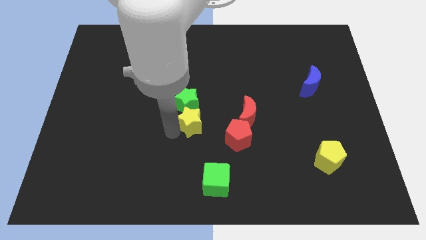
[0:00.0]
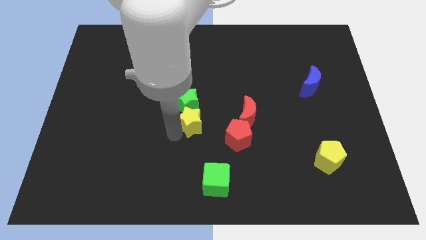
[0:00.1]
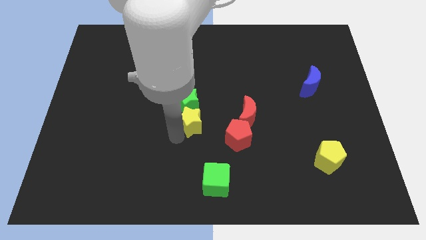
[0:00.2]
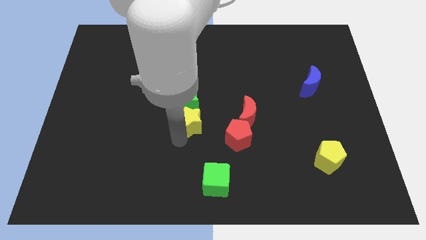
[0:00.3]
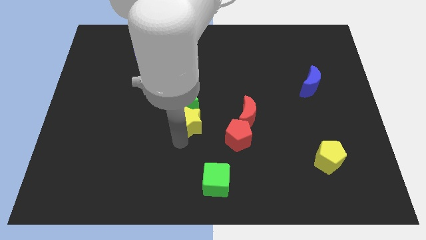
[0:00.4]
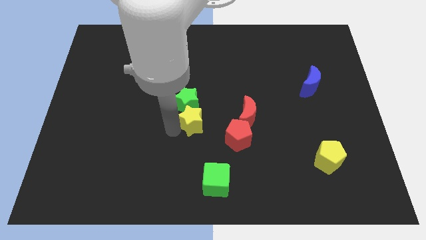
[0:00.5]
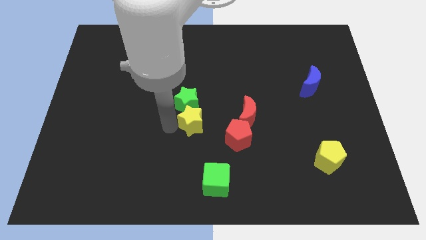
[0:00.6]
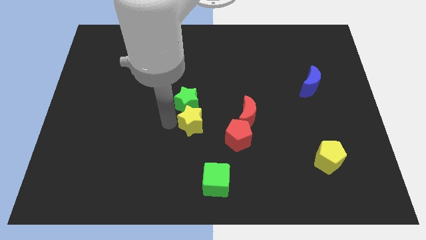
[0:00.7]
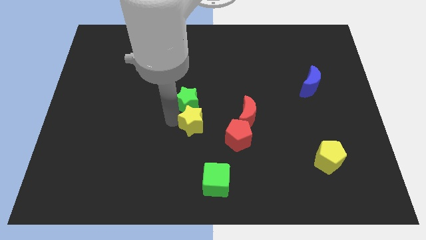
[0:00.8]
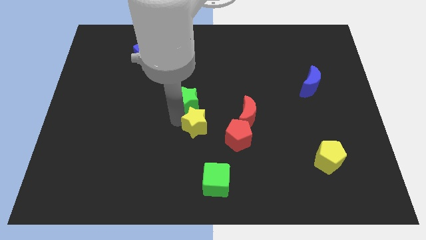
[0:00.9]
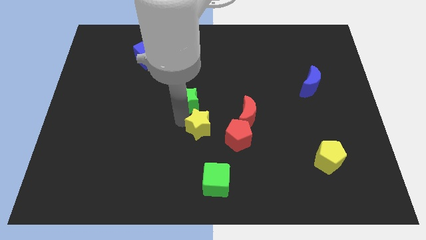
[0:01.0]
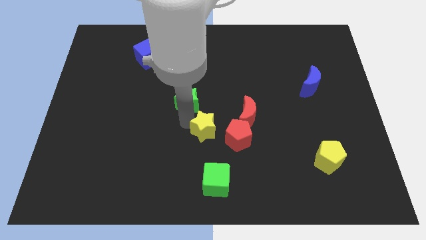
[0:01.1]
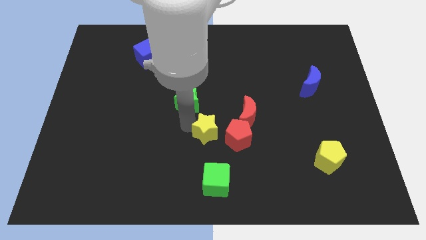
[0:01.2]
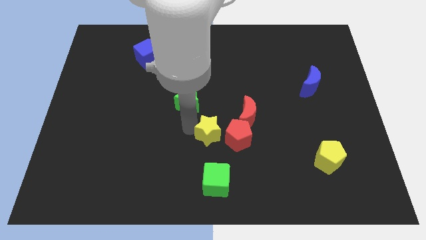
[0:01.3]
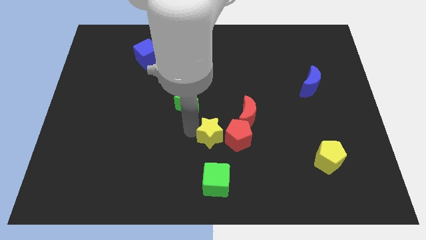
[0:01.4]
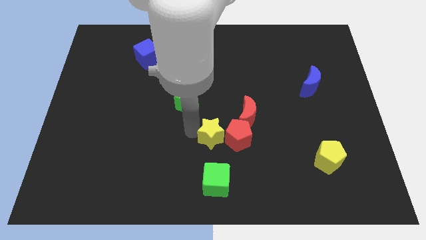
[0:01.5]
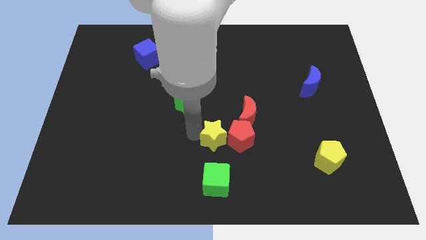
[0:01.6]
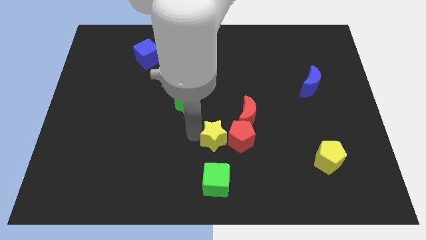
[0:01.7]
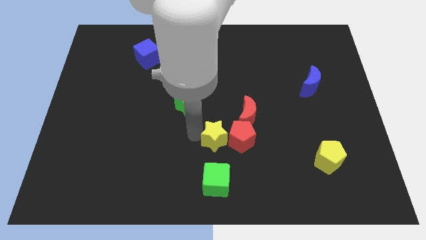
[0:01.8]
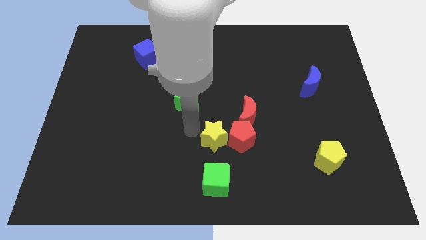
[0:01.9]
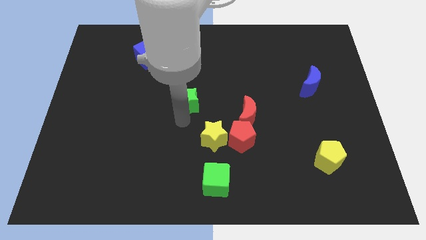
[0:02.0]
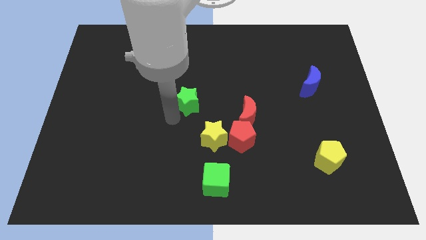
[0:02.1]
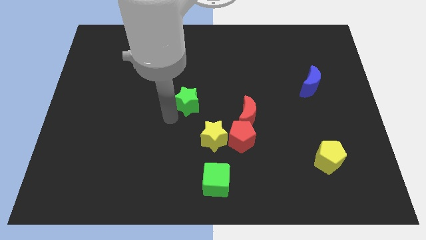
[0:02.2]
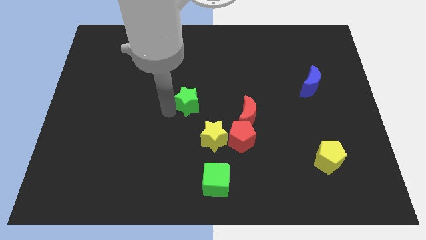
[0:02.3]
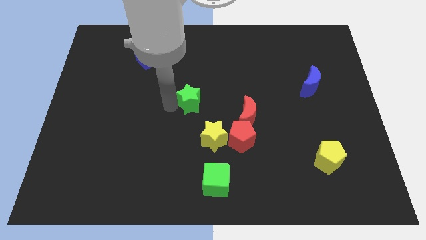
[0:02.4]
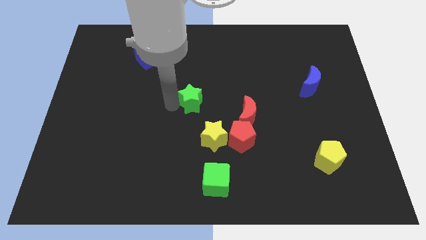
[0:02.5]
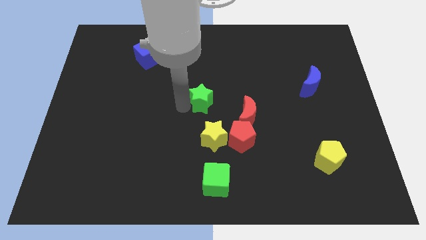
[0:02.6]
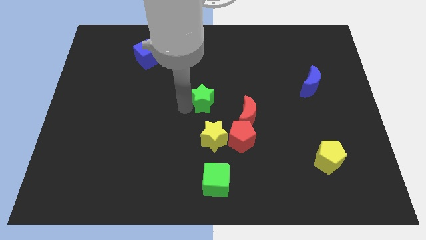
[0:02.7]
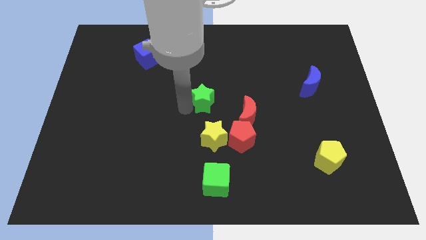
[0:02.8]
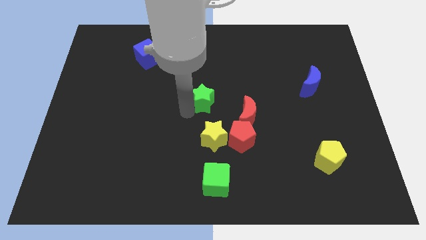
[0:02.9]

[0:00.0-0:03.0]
place yellow star to the left of the red pentagon

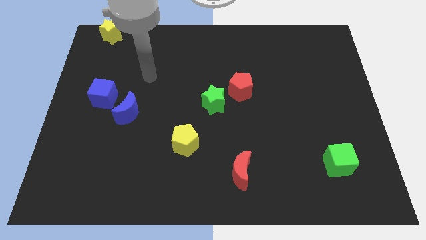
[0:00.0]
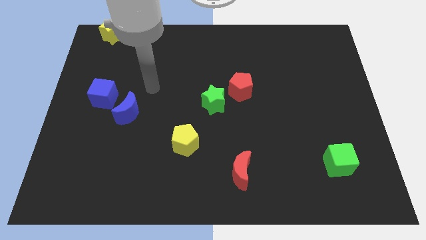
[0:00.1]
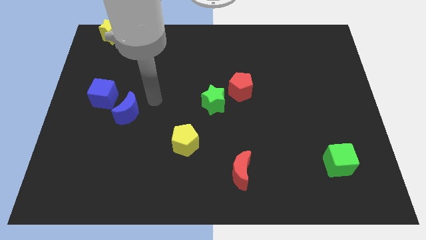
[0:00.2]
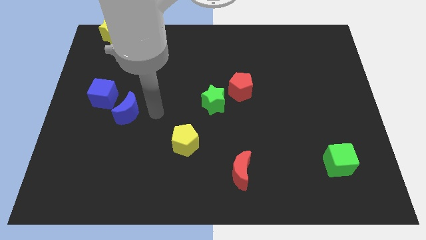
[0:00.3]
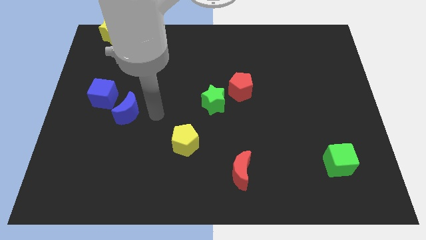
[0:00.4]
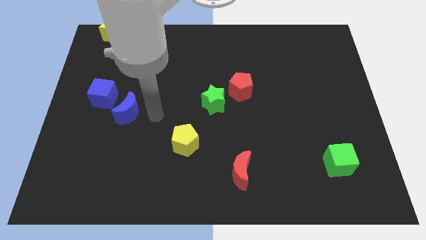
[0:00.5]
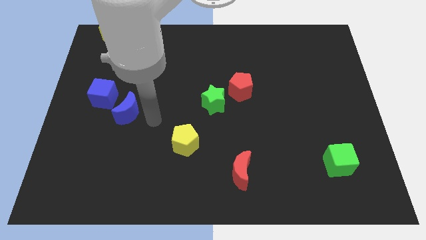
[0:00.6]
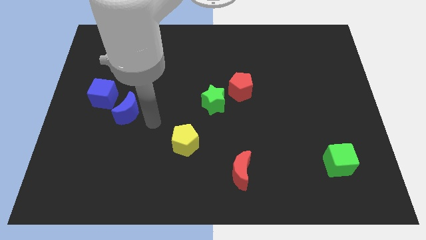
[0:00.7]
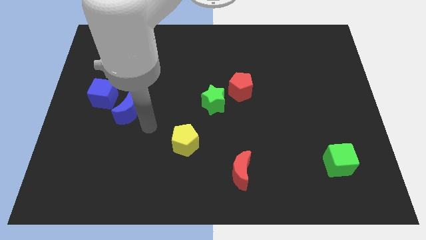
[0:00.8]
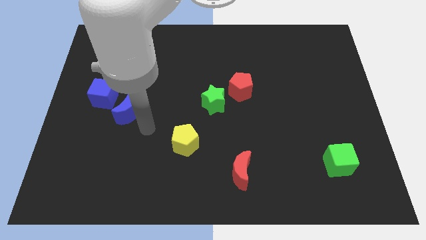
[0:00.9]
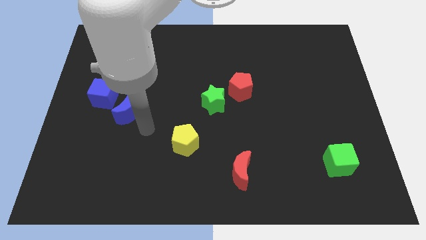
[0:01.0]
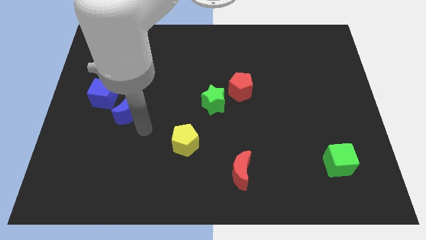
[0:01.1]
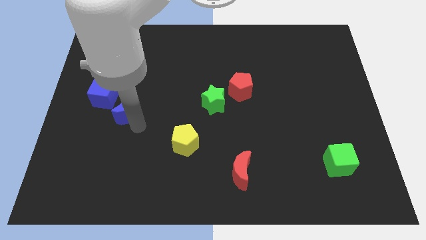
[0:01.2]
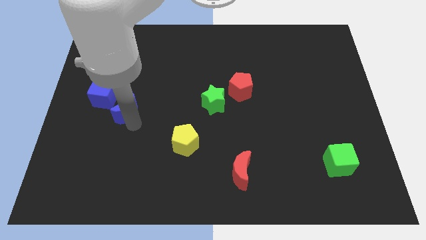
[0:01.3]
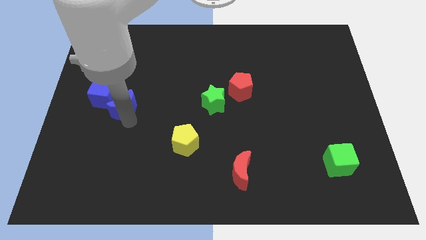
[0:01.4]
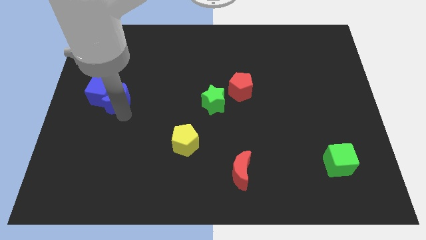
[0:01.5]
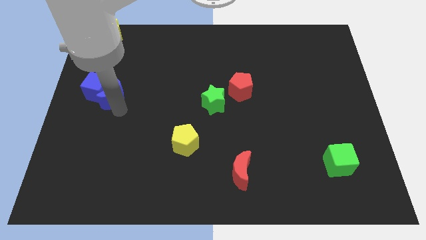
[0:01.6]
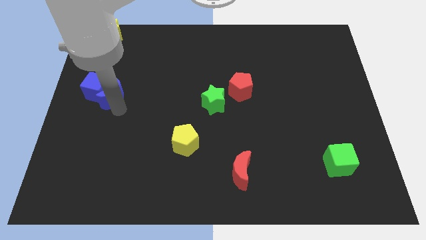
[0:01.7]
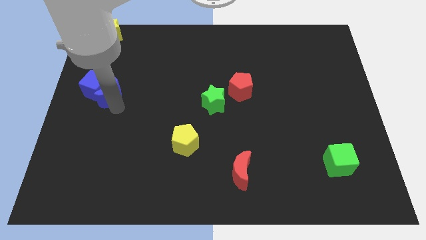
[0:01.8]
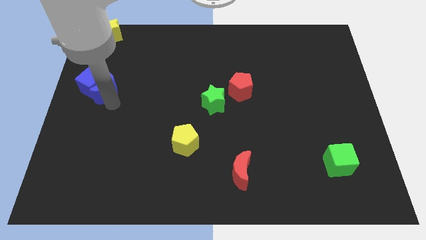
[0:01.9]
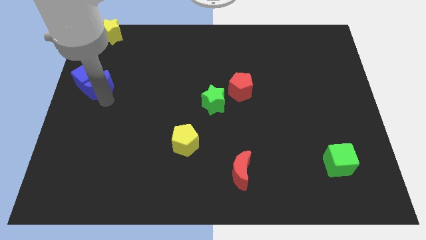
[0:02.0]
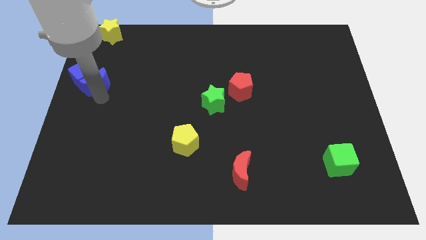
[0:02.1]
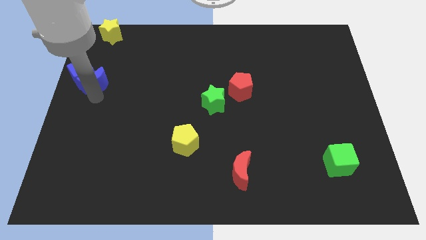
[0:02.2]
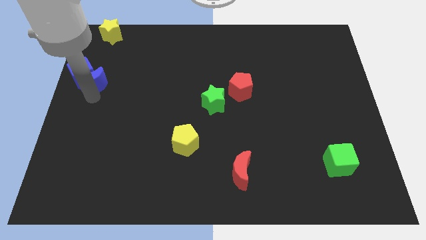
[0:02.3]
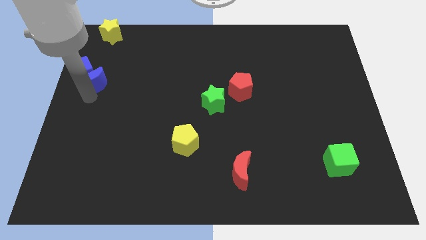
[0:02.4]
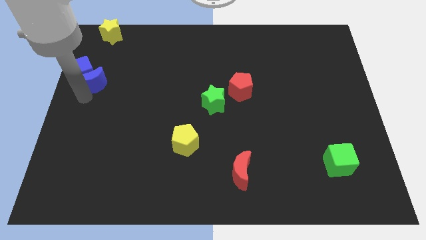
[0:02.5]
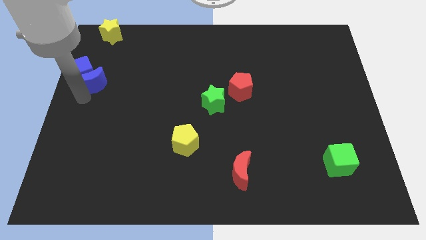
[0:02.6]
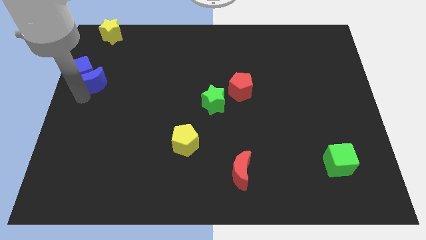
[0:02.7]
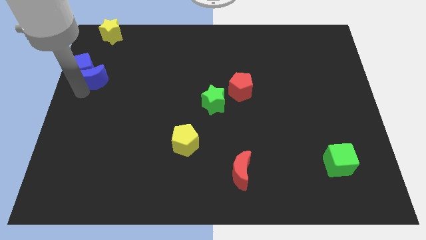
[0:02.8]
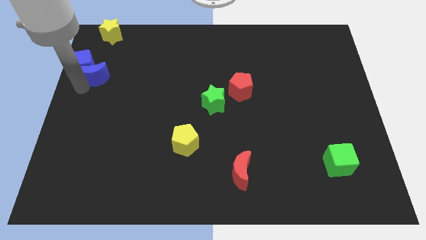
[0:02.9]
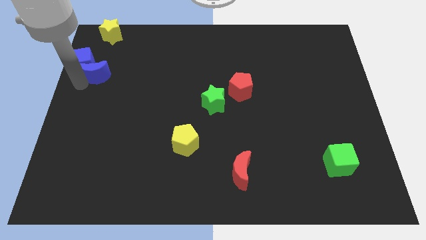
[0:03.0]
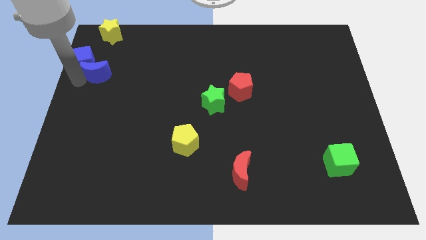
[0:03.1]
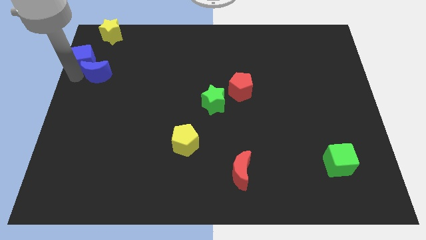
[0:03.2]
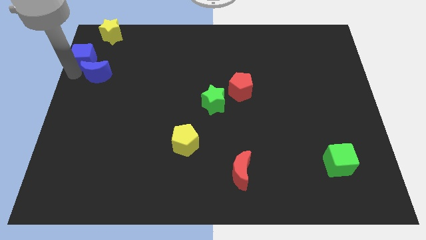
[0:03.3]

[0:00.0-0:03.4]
move the blue blocks towards the top left of the board

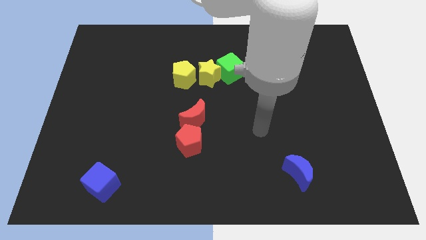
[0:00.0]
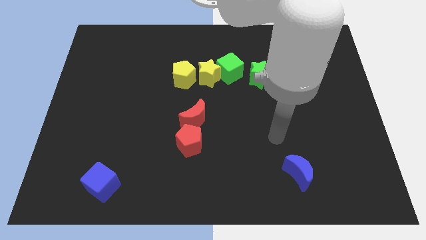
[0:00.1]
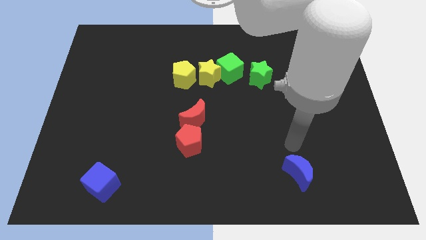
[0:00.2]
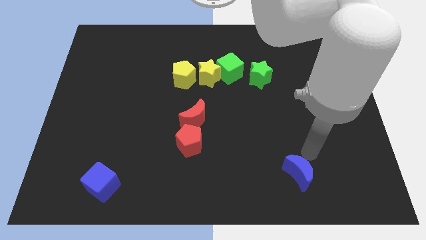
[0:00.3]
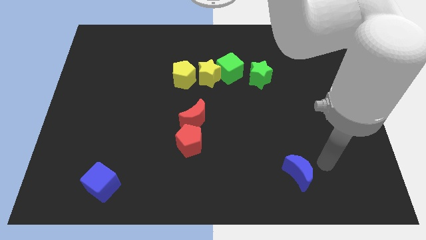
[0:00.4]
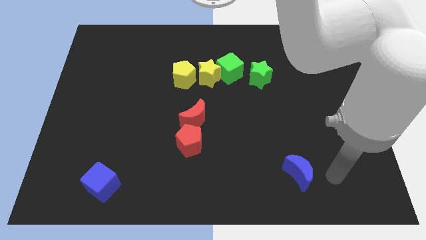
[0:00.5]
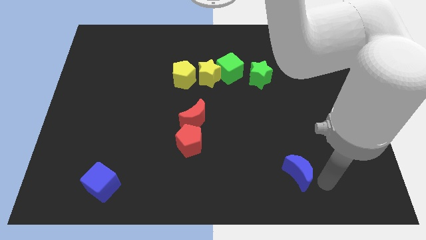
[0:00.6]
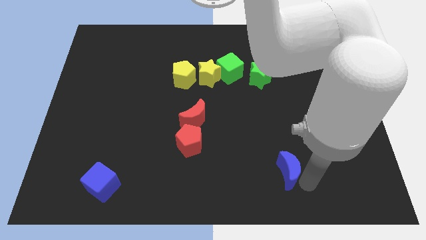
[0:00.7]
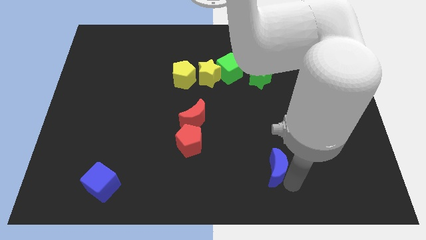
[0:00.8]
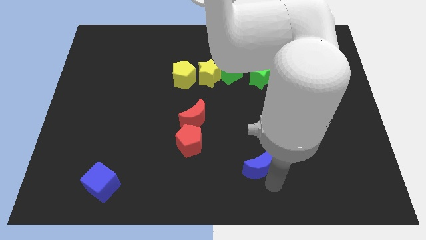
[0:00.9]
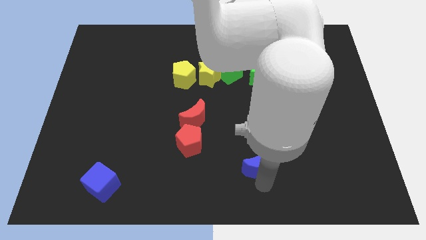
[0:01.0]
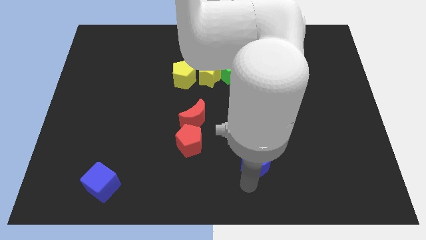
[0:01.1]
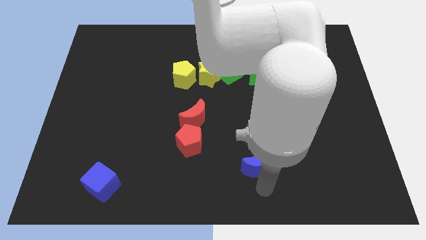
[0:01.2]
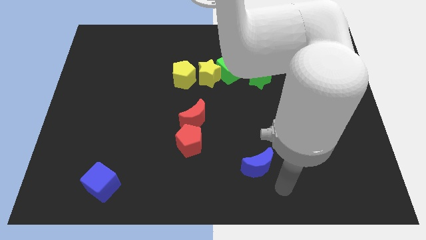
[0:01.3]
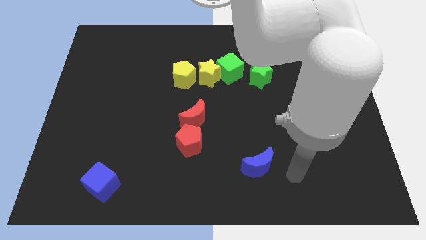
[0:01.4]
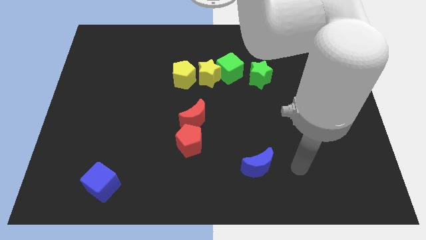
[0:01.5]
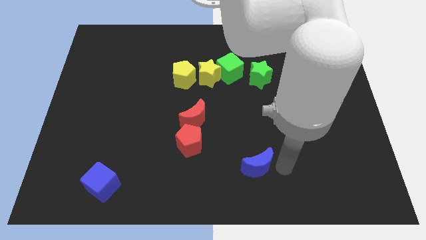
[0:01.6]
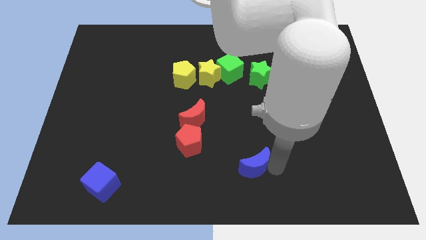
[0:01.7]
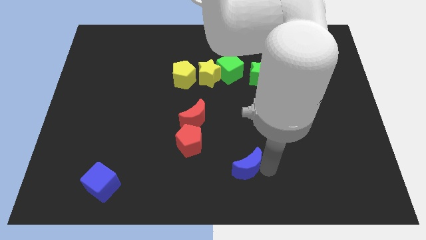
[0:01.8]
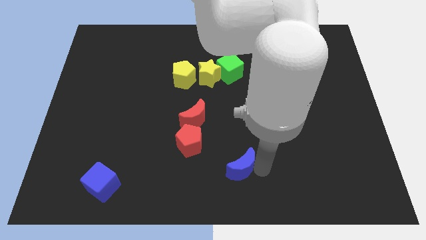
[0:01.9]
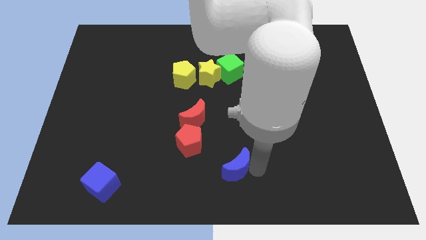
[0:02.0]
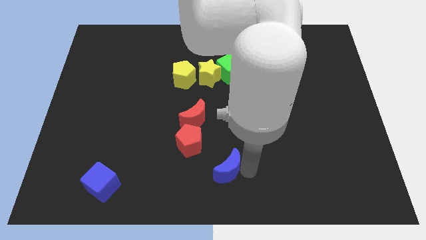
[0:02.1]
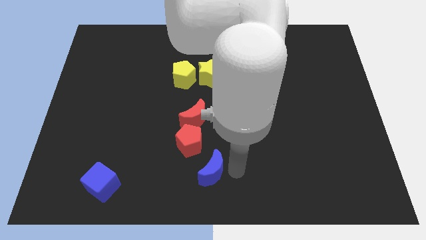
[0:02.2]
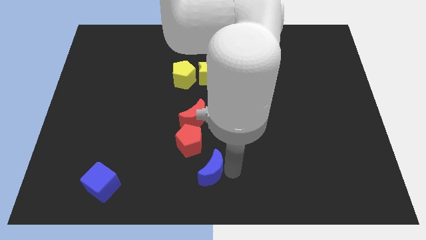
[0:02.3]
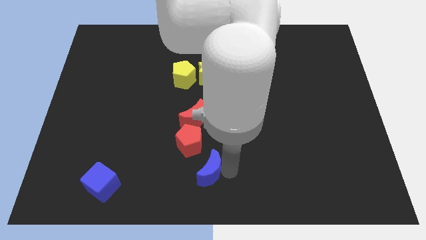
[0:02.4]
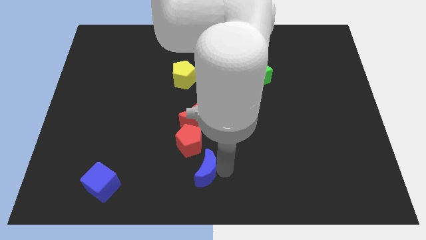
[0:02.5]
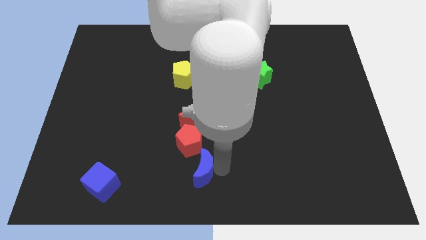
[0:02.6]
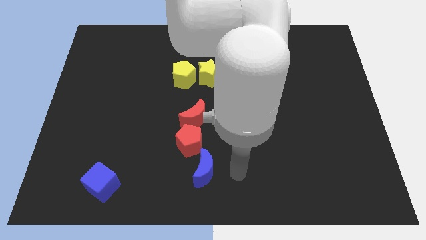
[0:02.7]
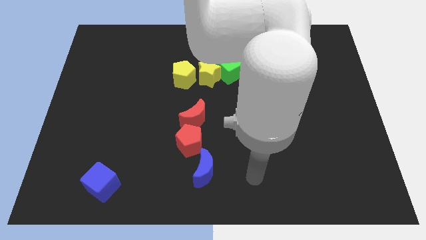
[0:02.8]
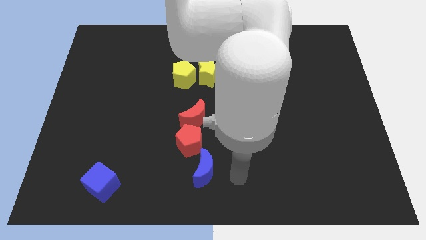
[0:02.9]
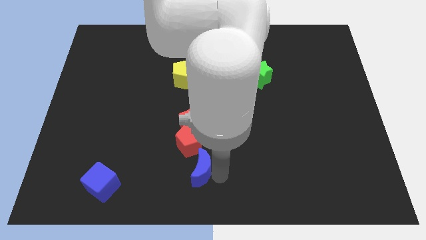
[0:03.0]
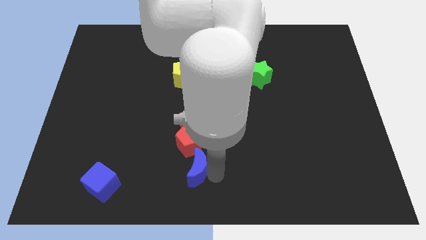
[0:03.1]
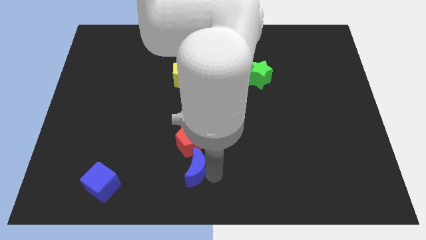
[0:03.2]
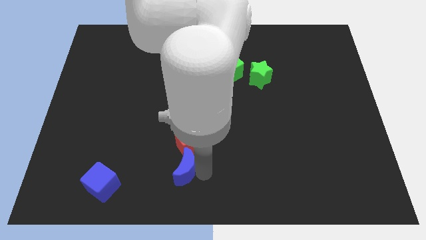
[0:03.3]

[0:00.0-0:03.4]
push the blue crescent to the bottom center of the board
